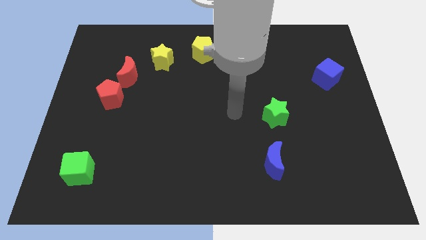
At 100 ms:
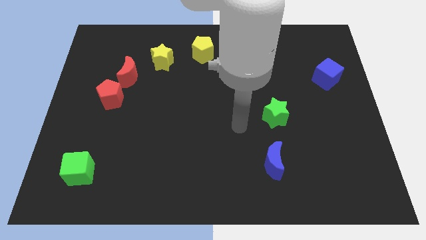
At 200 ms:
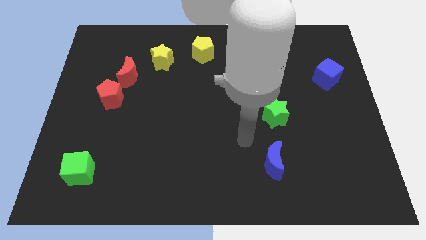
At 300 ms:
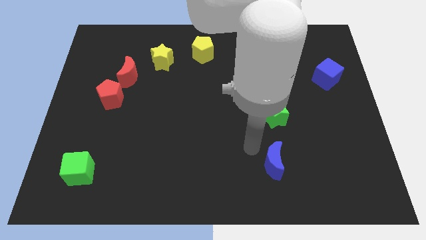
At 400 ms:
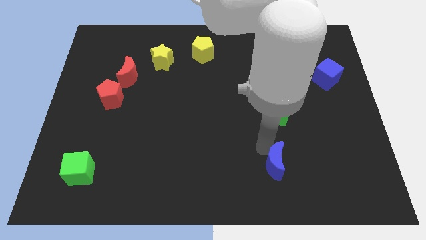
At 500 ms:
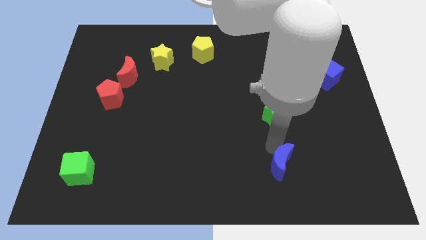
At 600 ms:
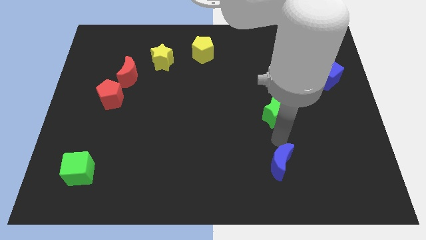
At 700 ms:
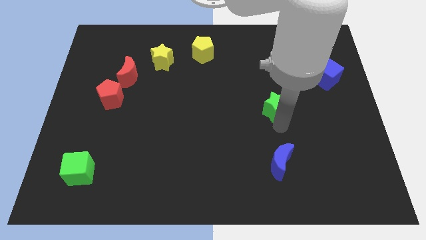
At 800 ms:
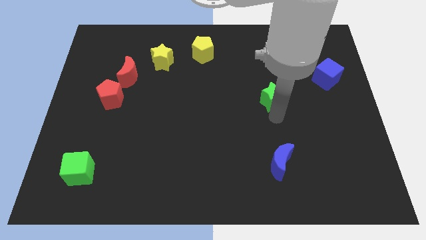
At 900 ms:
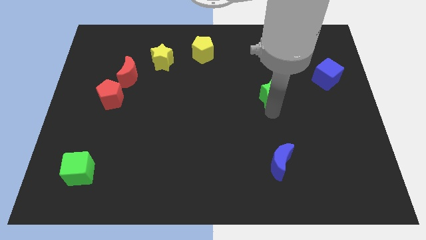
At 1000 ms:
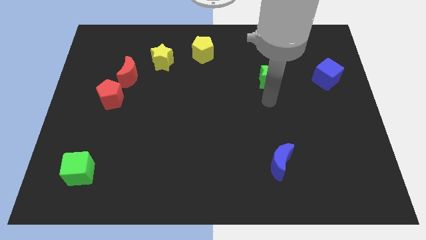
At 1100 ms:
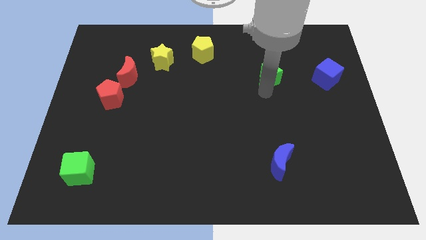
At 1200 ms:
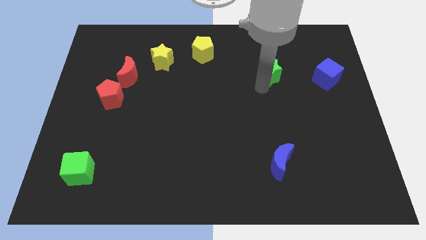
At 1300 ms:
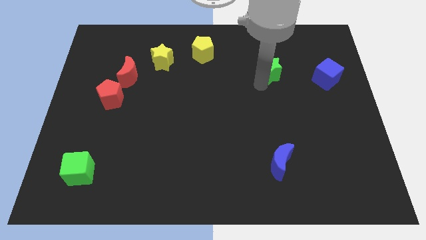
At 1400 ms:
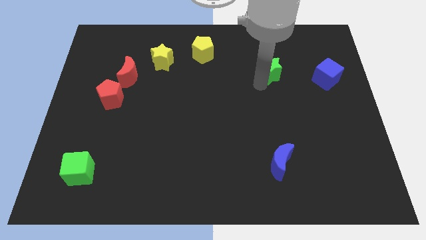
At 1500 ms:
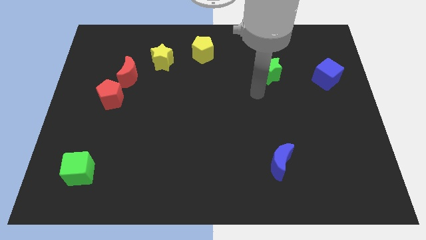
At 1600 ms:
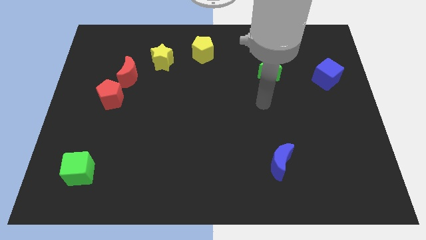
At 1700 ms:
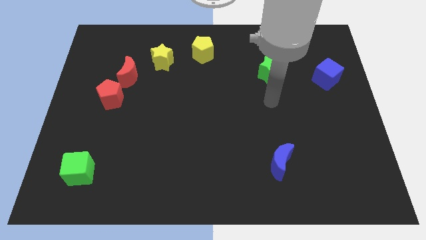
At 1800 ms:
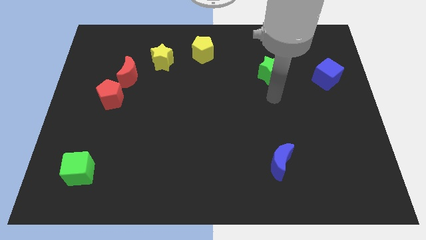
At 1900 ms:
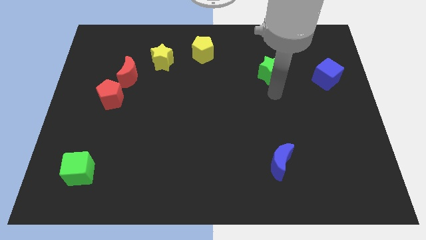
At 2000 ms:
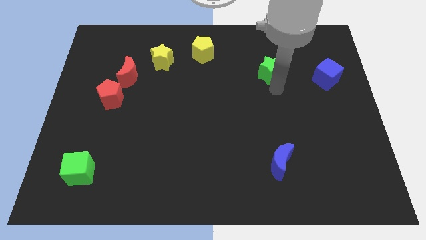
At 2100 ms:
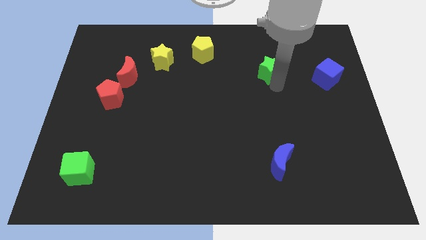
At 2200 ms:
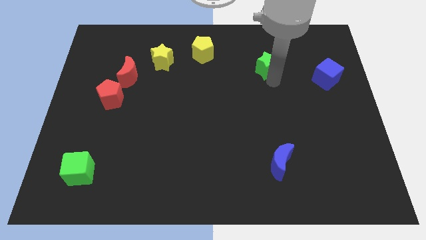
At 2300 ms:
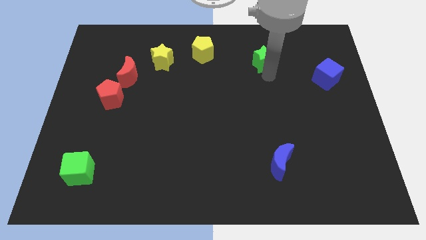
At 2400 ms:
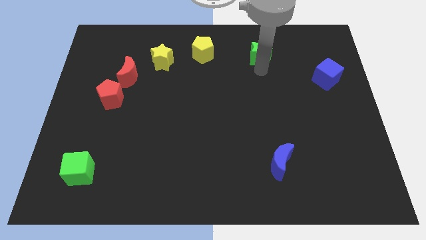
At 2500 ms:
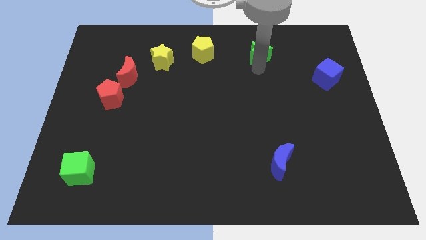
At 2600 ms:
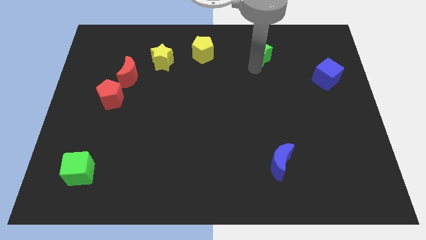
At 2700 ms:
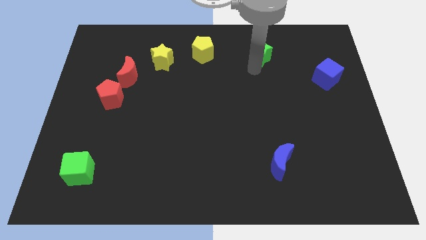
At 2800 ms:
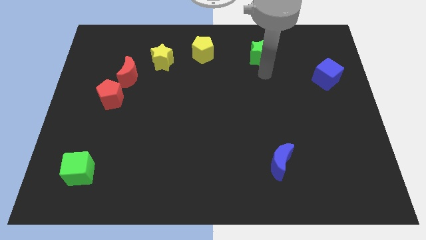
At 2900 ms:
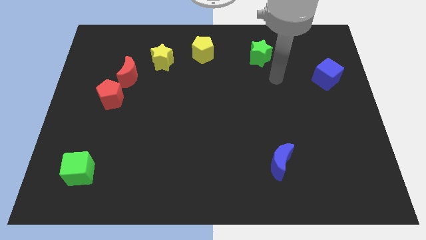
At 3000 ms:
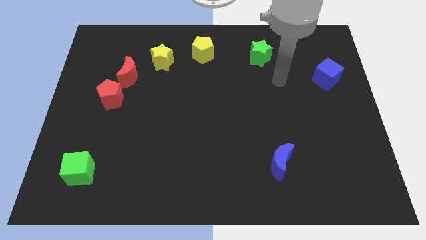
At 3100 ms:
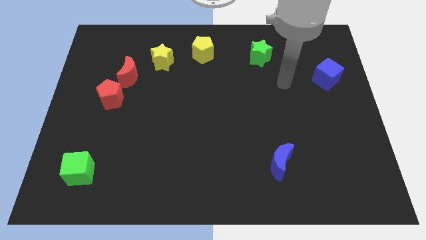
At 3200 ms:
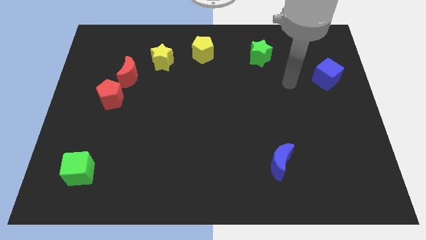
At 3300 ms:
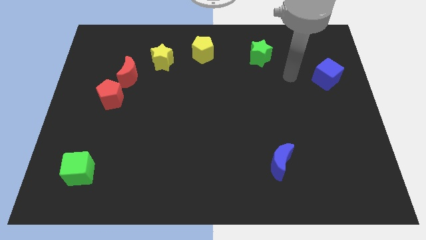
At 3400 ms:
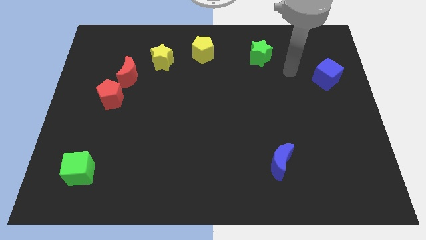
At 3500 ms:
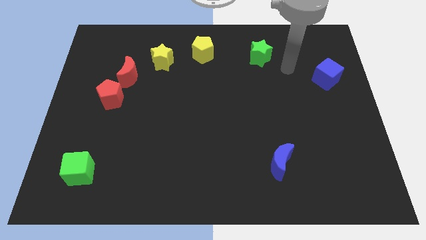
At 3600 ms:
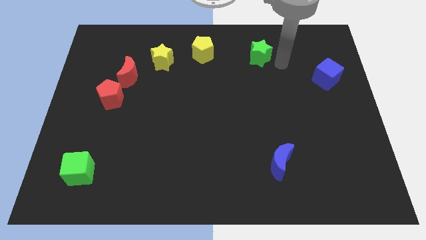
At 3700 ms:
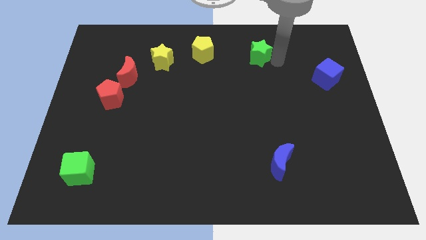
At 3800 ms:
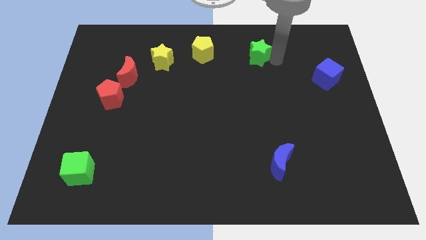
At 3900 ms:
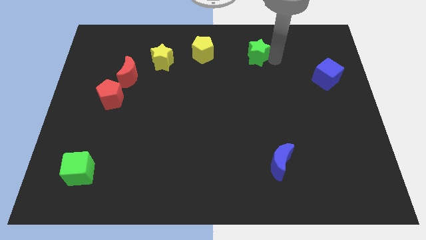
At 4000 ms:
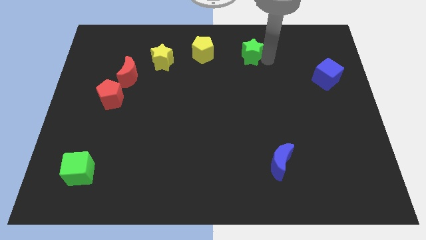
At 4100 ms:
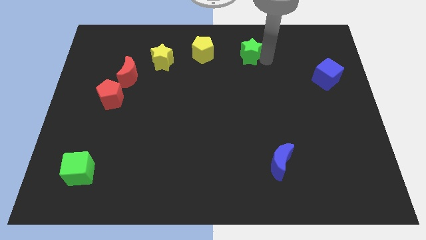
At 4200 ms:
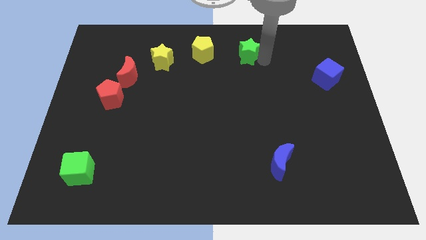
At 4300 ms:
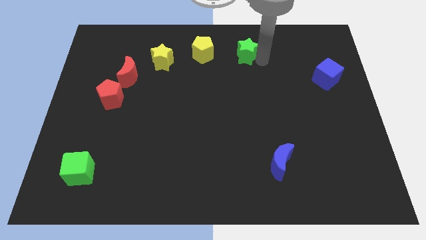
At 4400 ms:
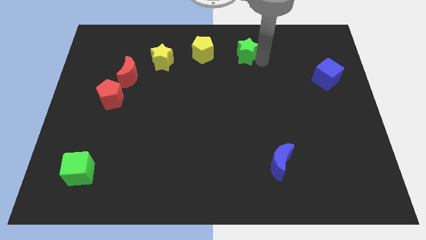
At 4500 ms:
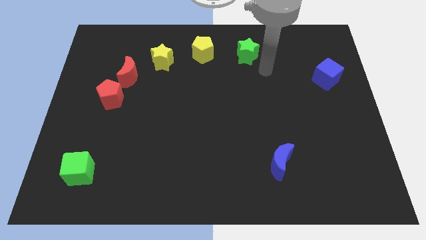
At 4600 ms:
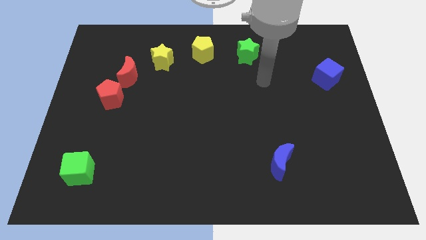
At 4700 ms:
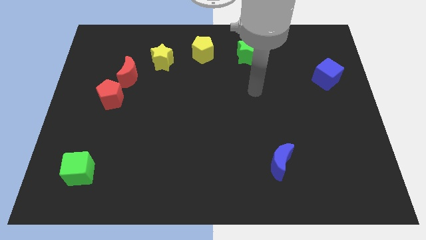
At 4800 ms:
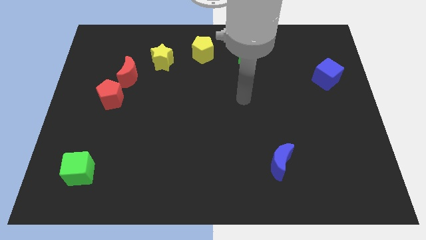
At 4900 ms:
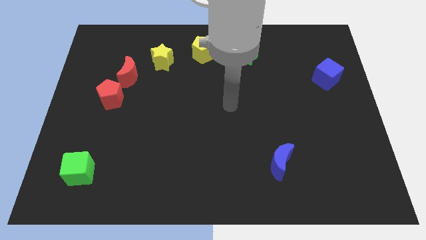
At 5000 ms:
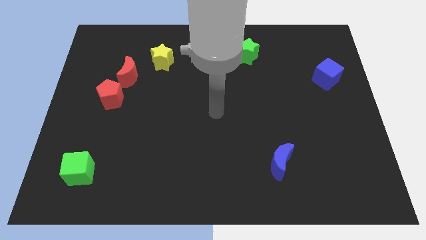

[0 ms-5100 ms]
push green star towards yellow pentagon

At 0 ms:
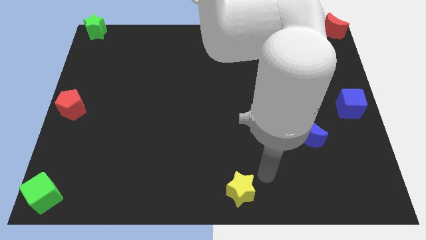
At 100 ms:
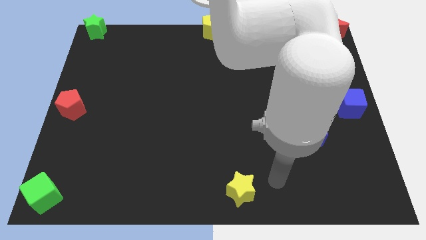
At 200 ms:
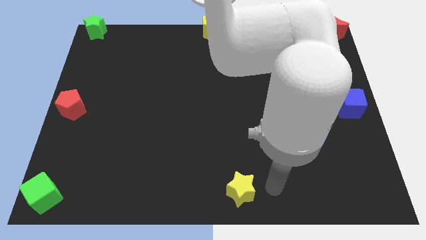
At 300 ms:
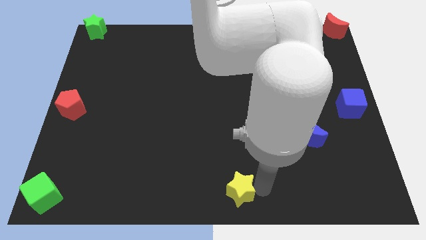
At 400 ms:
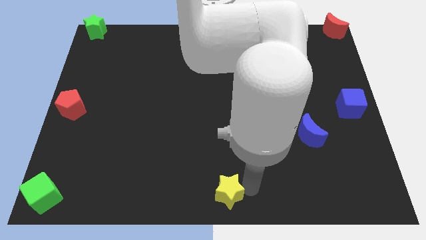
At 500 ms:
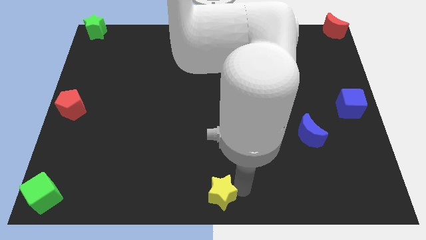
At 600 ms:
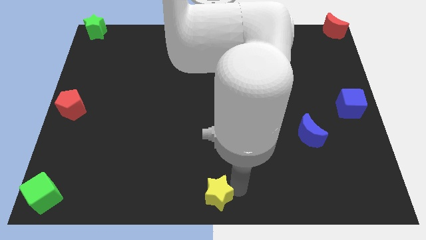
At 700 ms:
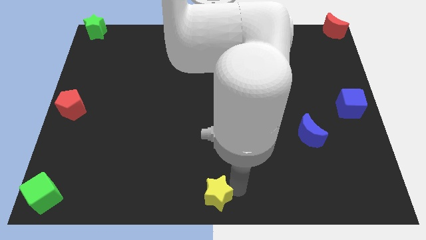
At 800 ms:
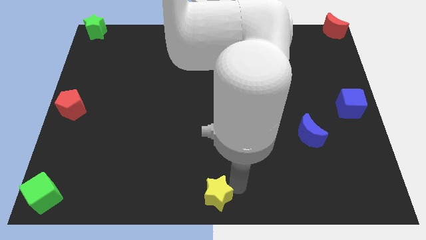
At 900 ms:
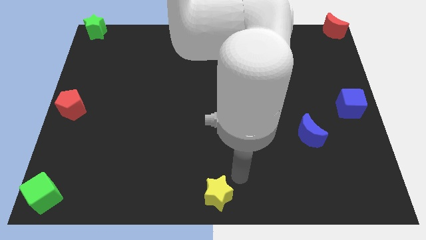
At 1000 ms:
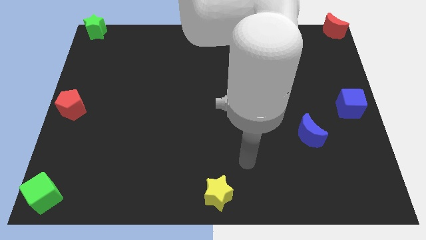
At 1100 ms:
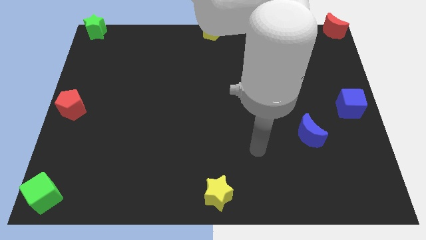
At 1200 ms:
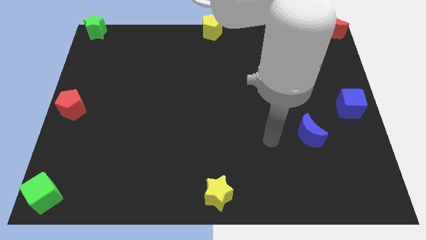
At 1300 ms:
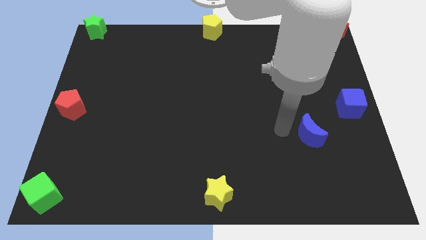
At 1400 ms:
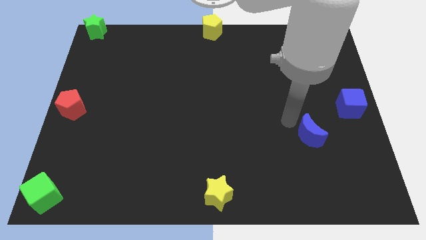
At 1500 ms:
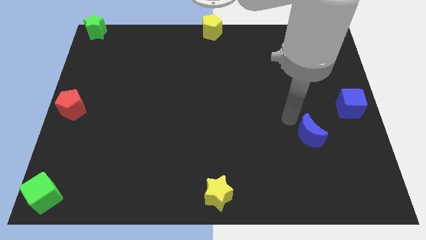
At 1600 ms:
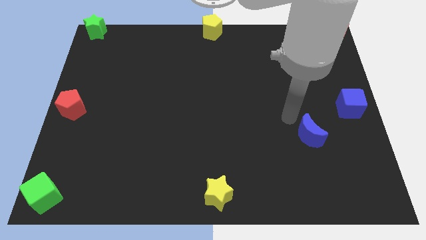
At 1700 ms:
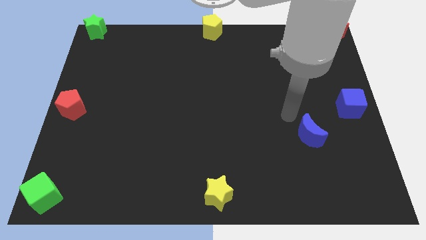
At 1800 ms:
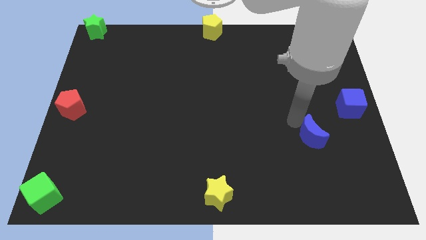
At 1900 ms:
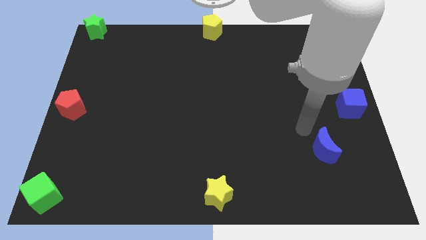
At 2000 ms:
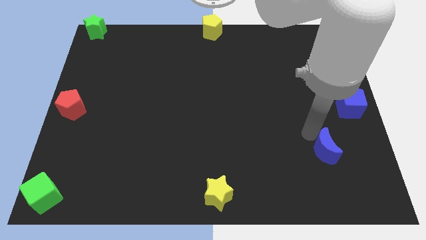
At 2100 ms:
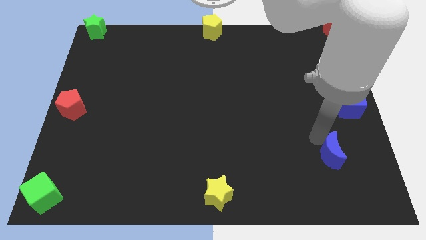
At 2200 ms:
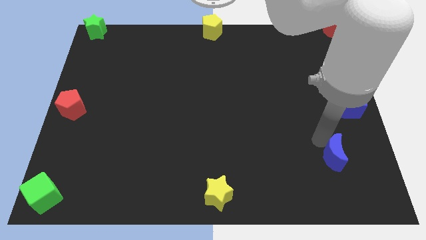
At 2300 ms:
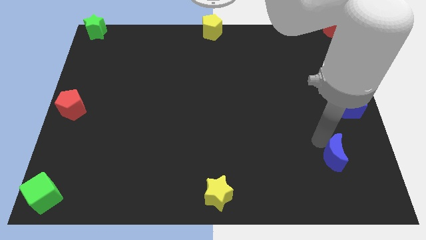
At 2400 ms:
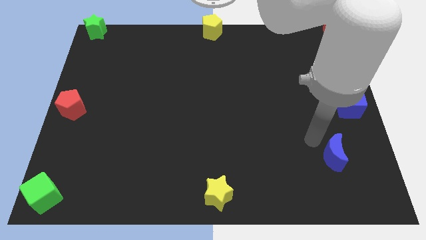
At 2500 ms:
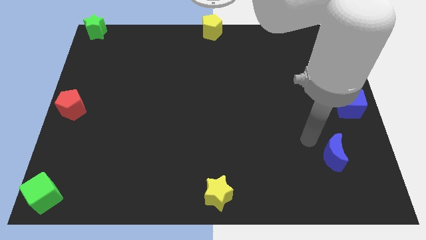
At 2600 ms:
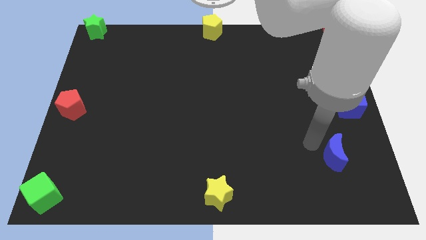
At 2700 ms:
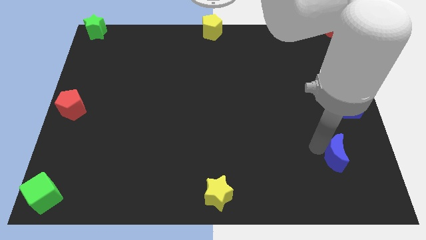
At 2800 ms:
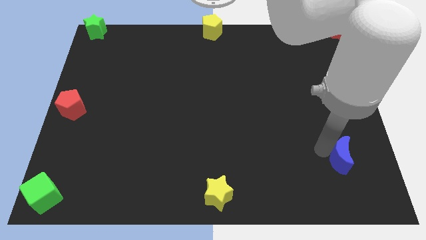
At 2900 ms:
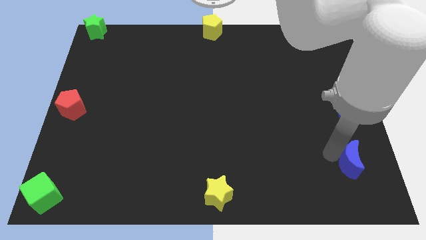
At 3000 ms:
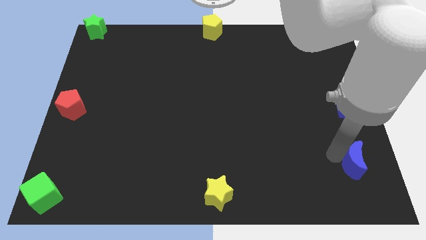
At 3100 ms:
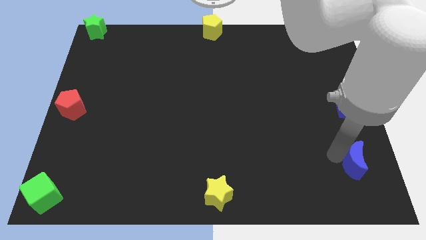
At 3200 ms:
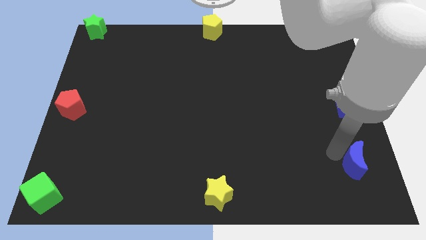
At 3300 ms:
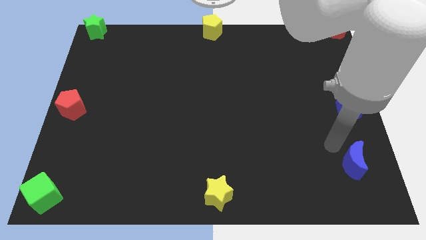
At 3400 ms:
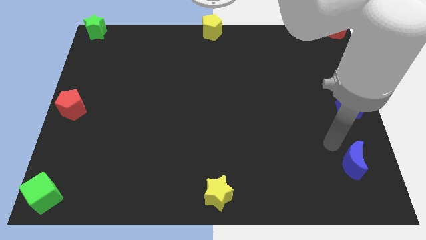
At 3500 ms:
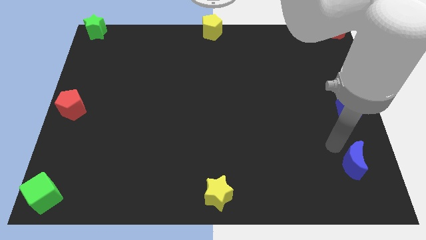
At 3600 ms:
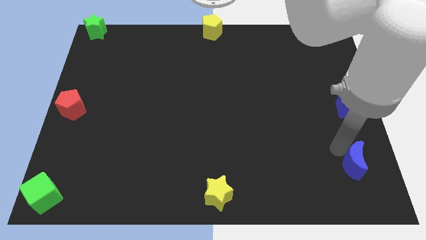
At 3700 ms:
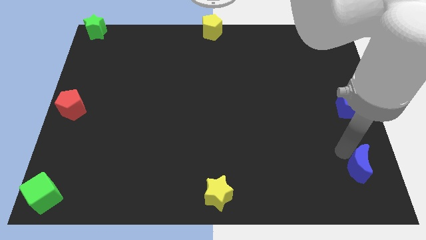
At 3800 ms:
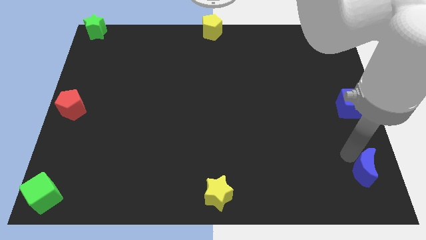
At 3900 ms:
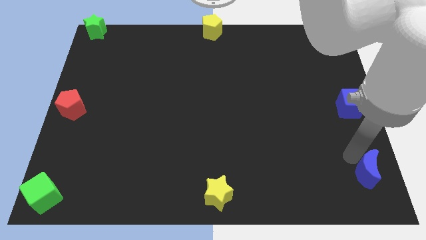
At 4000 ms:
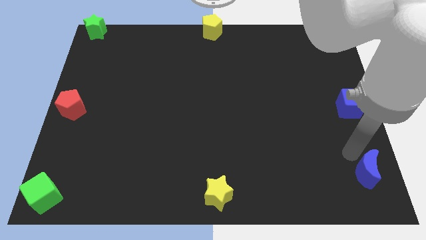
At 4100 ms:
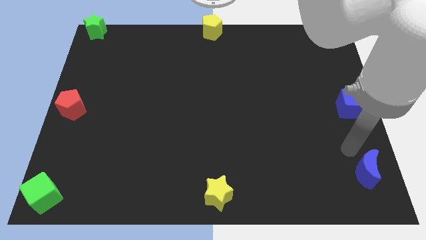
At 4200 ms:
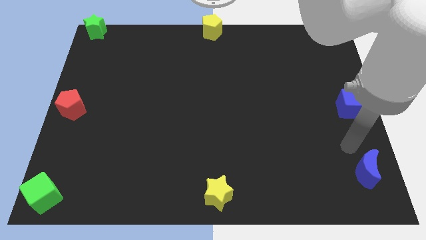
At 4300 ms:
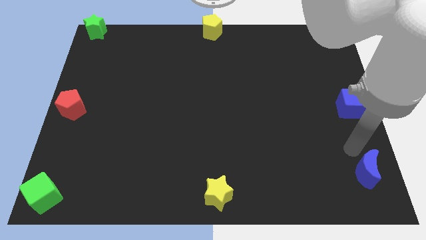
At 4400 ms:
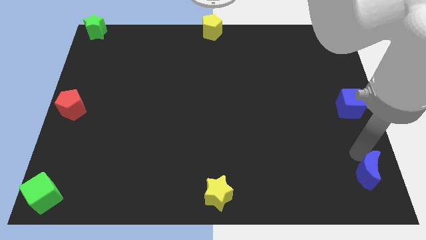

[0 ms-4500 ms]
push blue crescent below blue cube
